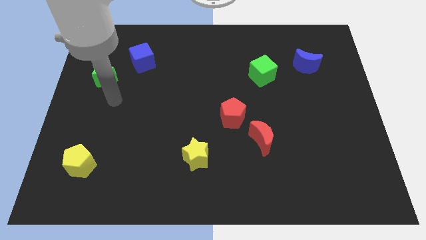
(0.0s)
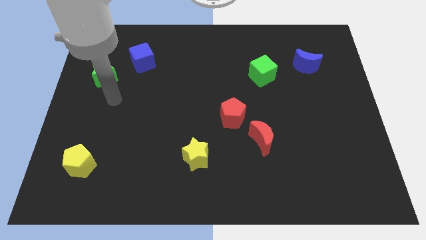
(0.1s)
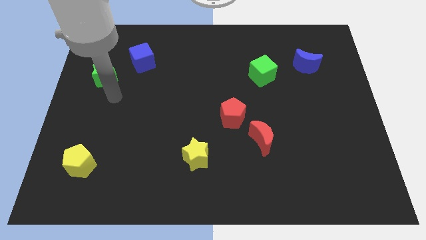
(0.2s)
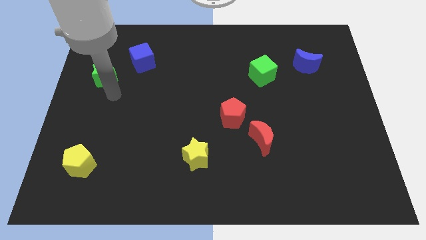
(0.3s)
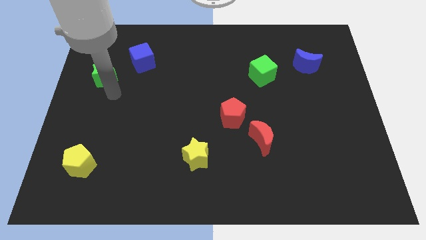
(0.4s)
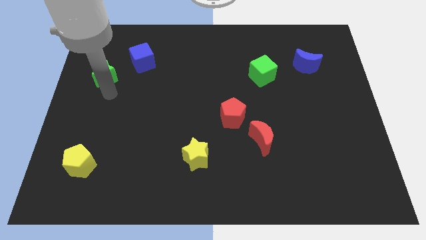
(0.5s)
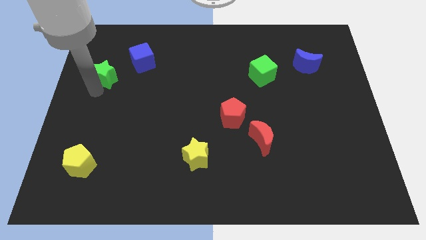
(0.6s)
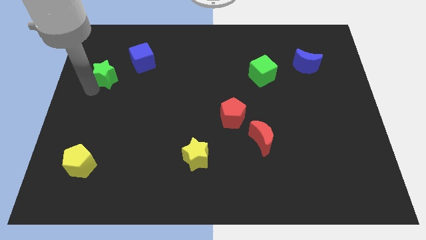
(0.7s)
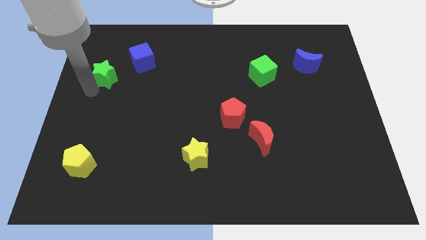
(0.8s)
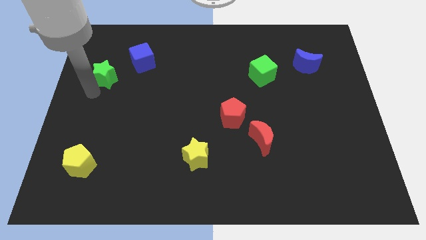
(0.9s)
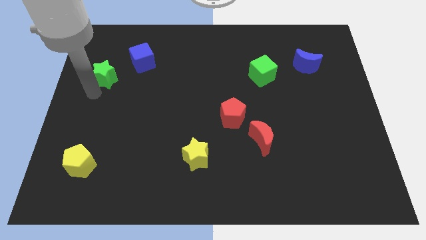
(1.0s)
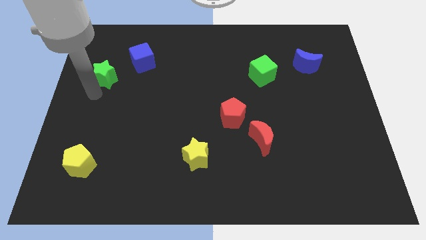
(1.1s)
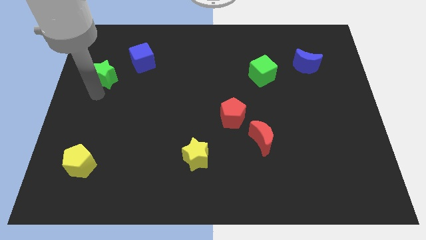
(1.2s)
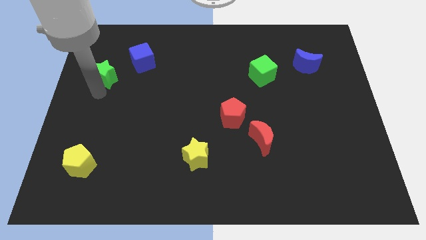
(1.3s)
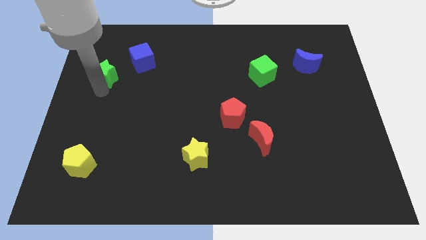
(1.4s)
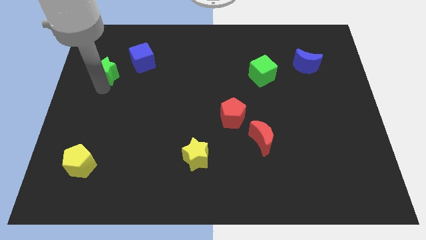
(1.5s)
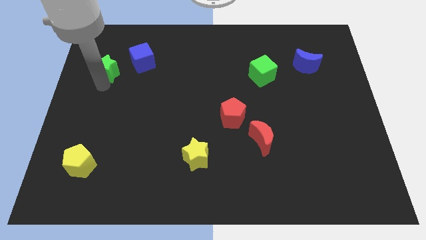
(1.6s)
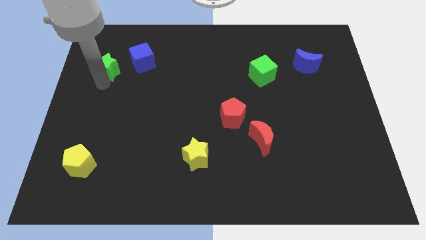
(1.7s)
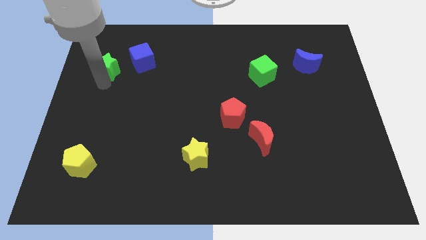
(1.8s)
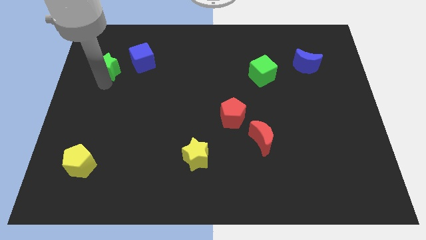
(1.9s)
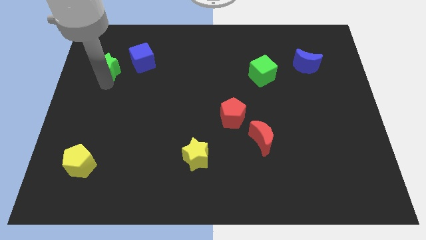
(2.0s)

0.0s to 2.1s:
push the green star slightly up

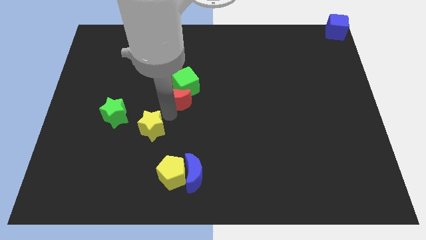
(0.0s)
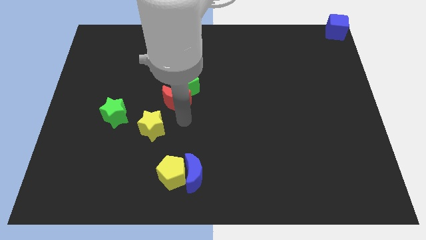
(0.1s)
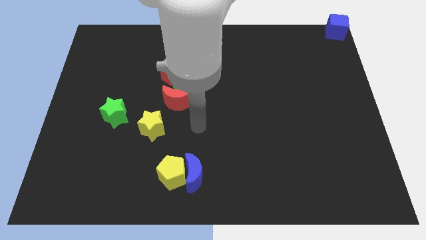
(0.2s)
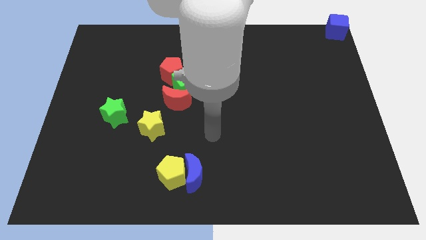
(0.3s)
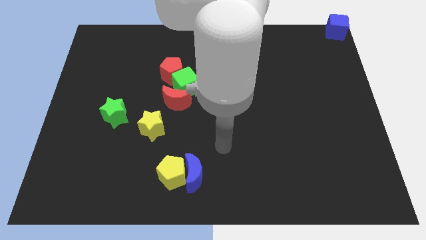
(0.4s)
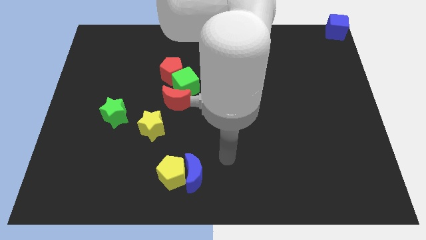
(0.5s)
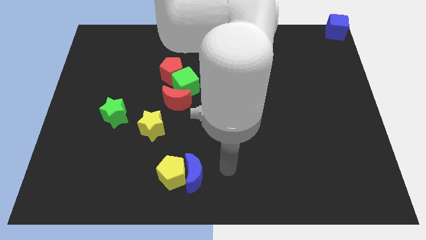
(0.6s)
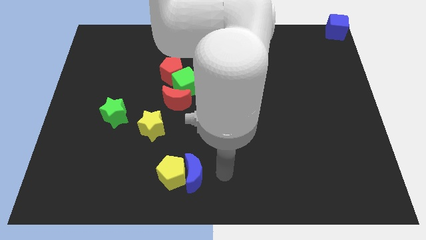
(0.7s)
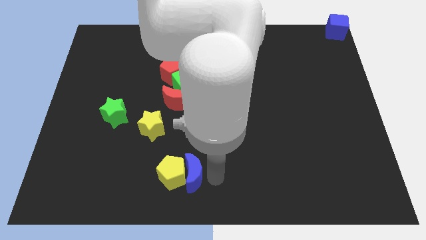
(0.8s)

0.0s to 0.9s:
point your arm to the right side of blue moon

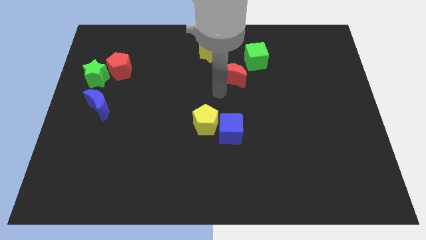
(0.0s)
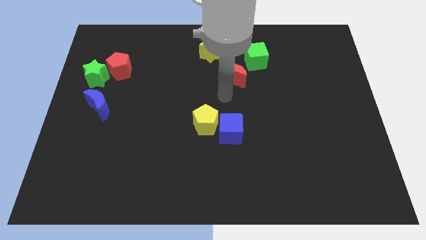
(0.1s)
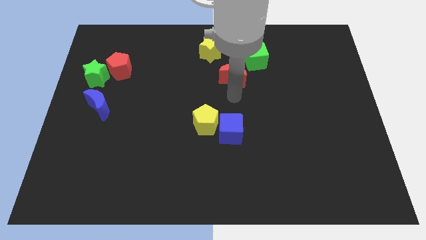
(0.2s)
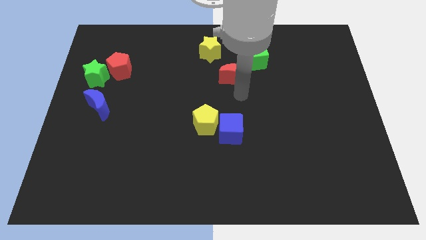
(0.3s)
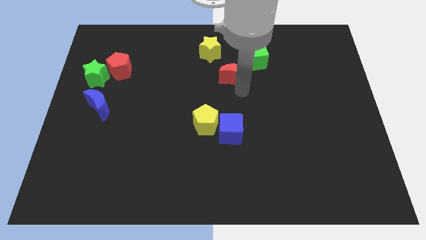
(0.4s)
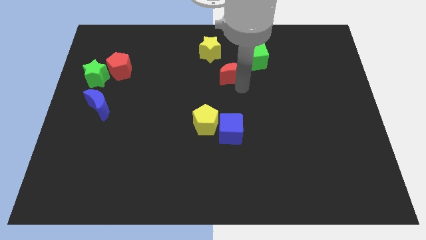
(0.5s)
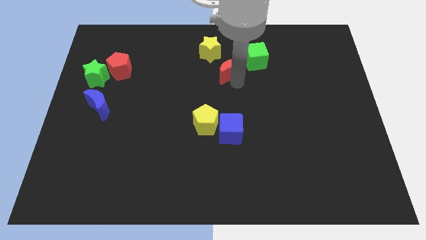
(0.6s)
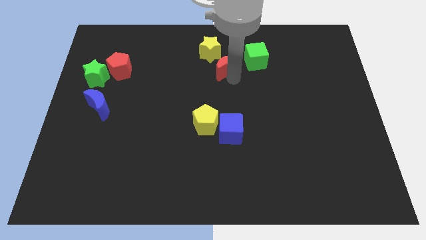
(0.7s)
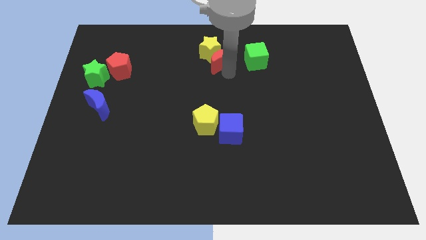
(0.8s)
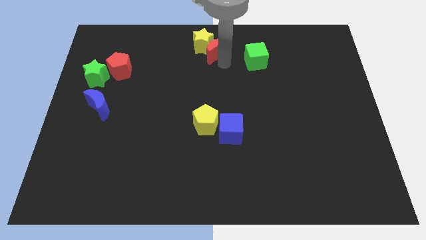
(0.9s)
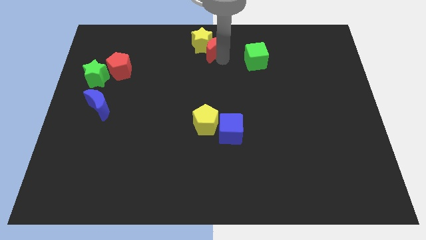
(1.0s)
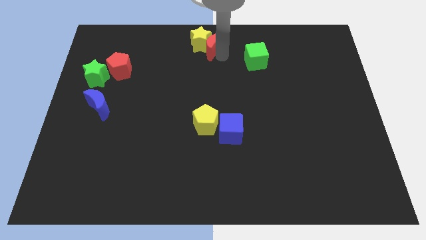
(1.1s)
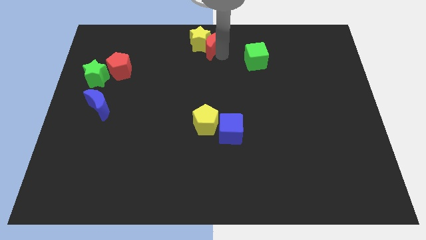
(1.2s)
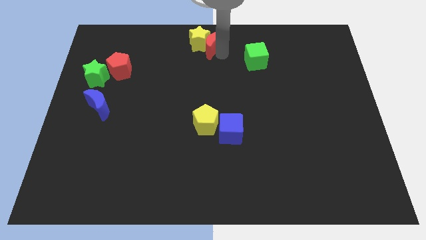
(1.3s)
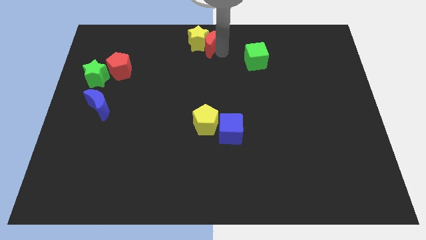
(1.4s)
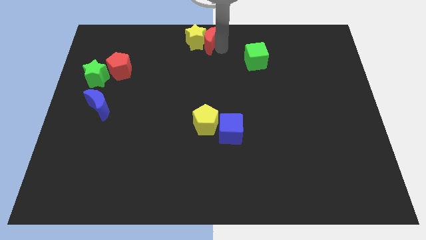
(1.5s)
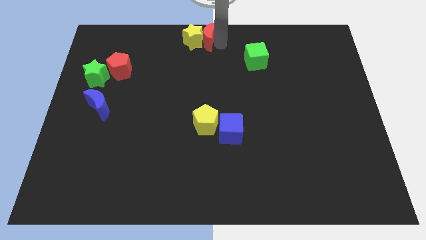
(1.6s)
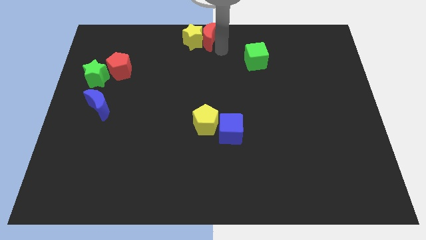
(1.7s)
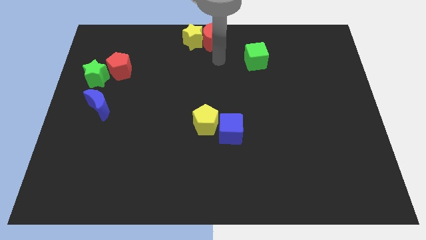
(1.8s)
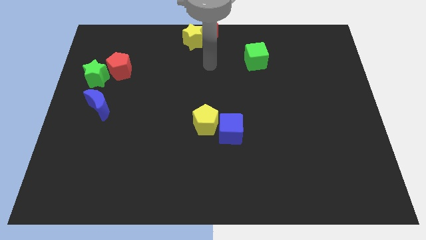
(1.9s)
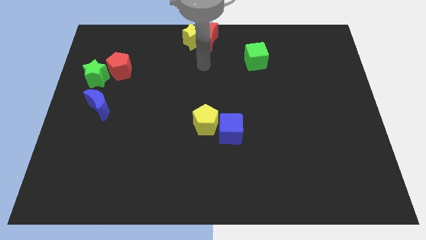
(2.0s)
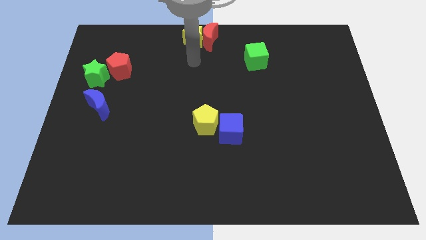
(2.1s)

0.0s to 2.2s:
push the red moon into the right of the yellow star

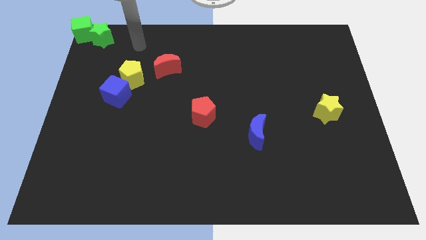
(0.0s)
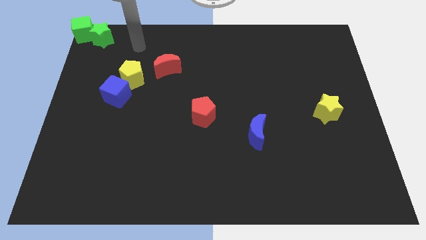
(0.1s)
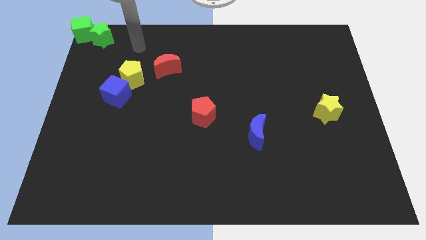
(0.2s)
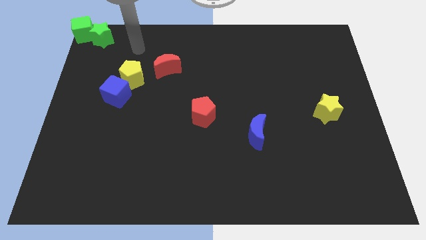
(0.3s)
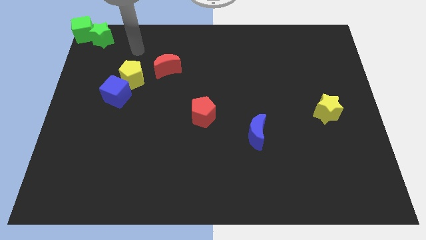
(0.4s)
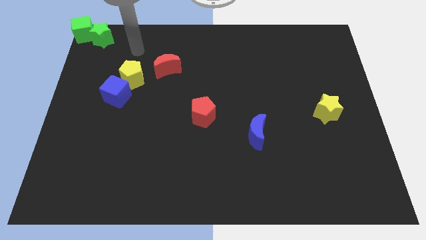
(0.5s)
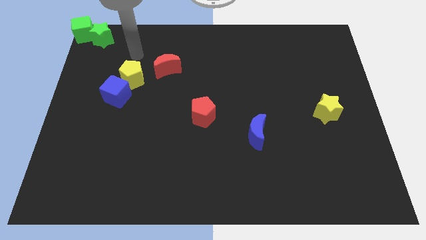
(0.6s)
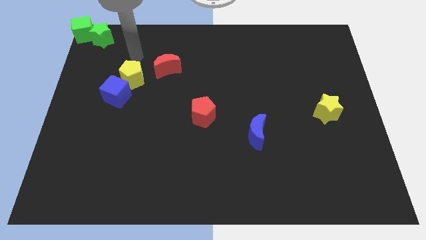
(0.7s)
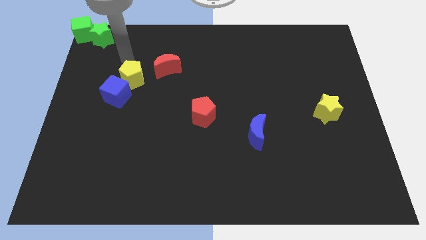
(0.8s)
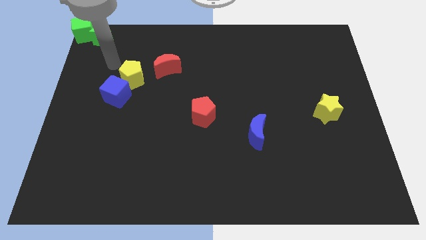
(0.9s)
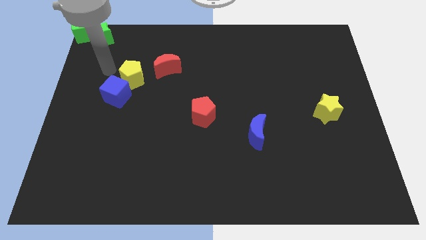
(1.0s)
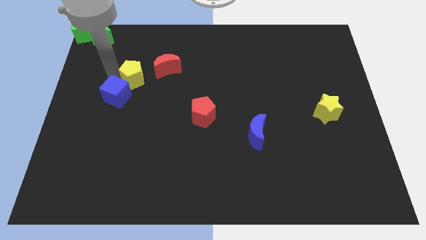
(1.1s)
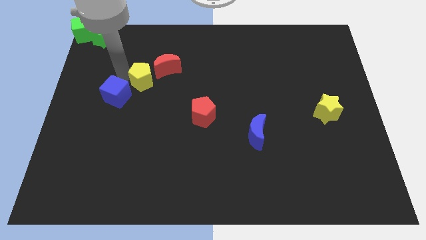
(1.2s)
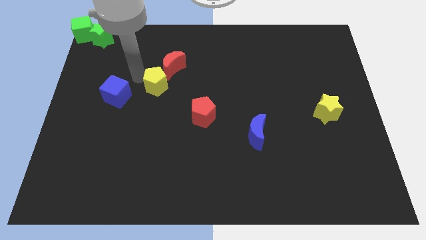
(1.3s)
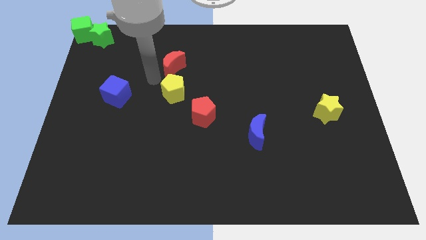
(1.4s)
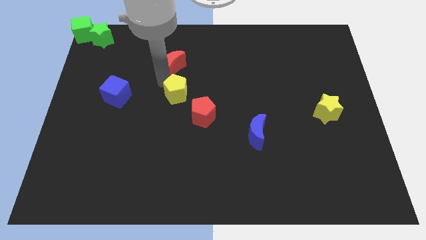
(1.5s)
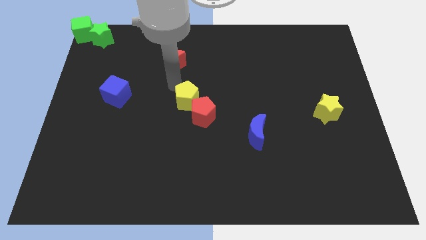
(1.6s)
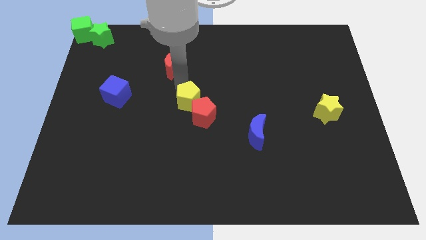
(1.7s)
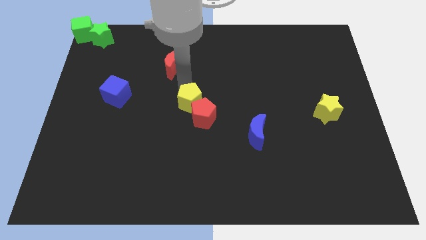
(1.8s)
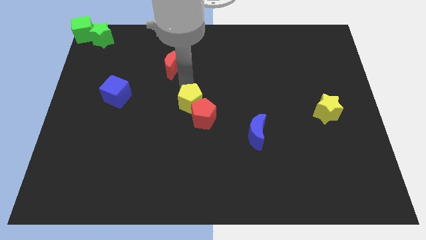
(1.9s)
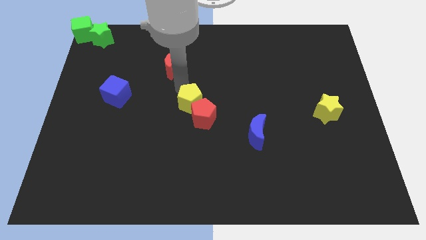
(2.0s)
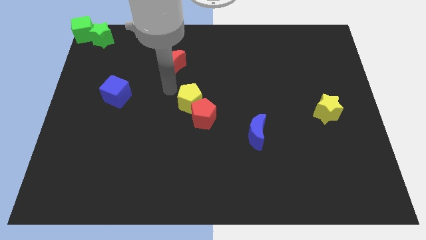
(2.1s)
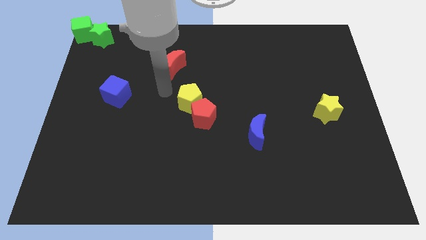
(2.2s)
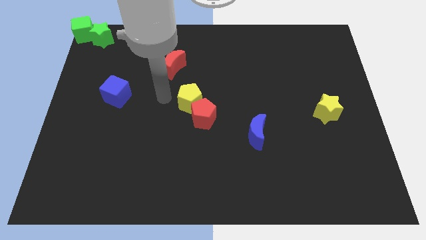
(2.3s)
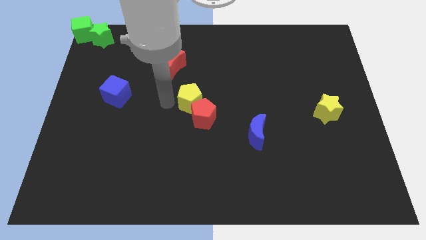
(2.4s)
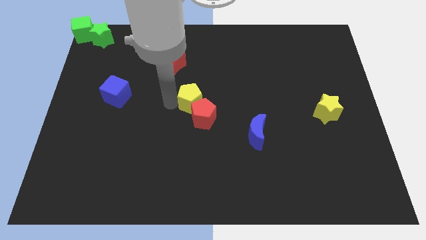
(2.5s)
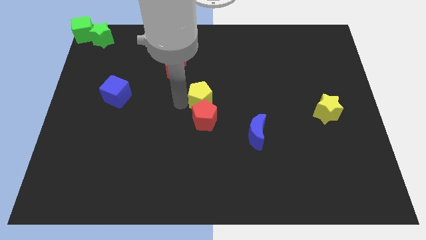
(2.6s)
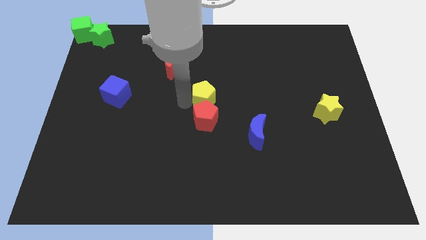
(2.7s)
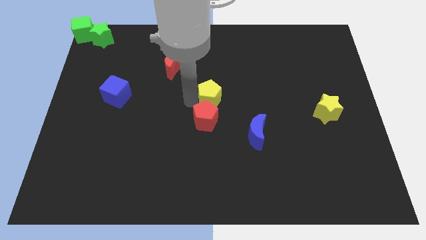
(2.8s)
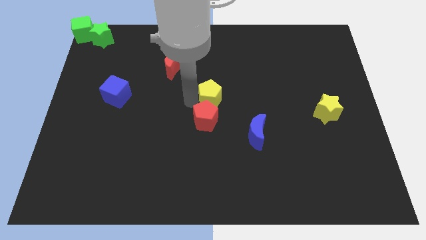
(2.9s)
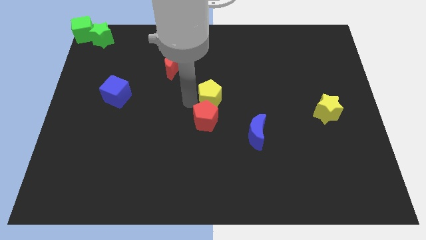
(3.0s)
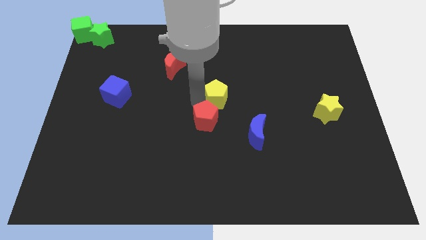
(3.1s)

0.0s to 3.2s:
place the yellow pentagon at the center of the board

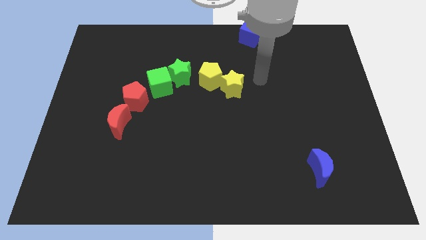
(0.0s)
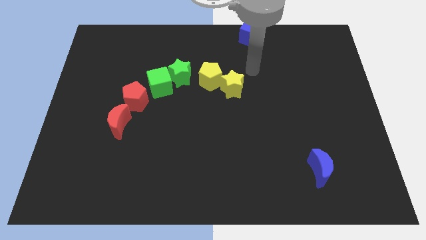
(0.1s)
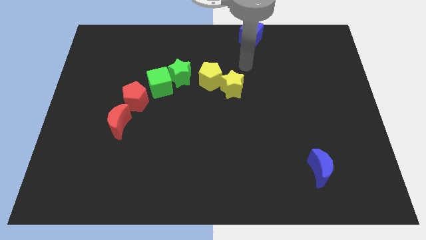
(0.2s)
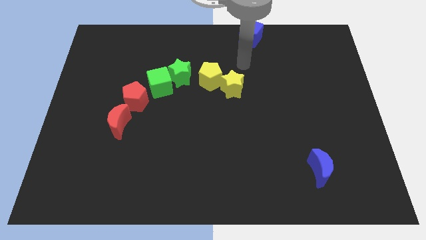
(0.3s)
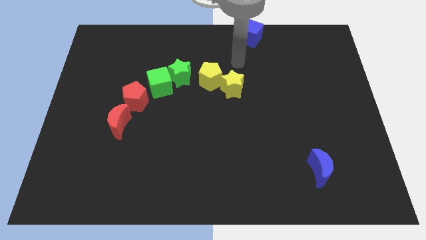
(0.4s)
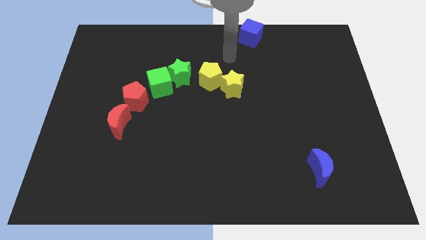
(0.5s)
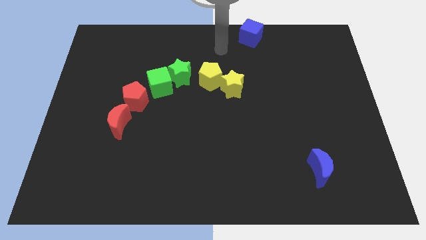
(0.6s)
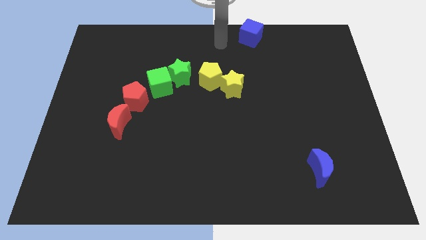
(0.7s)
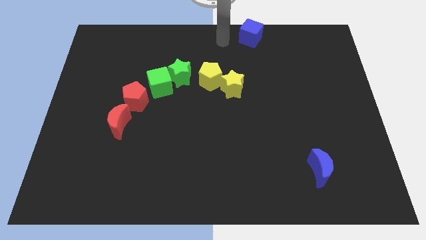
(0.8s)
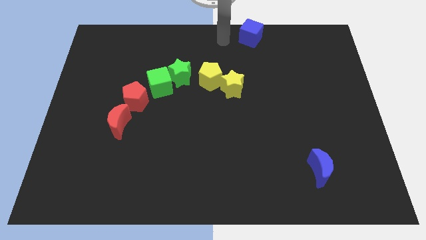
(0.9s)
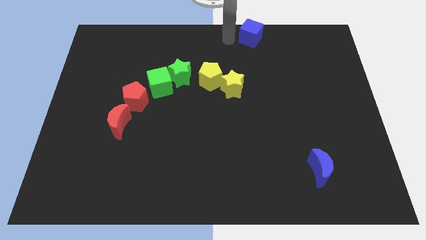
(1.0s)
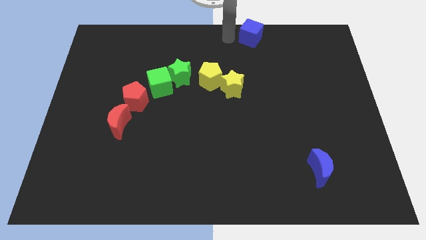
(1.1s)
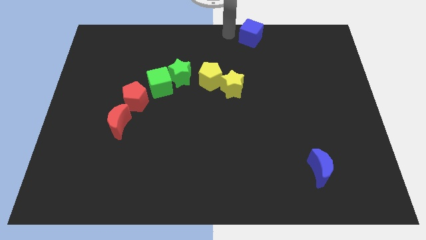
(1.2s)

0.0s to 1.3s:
point your arm at the left of the blue cube
